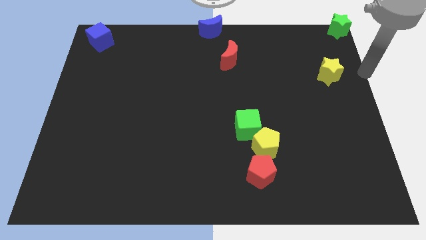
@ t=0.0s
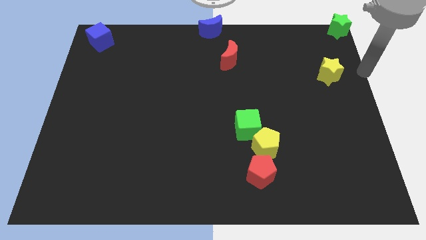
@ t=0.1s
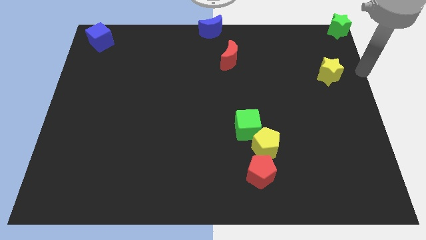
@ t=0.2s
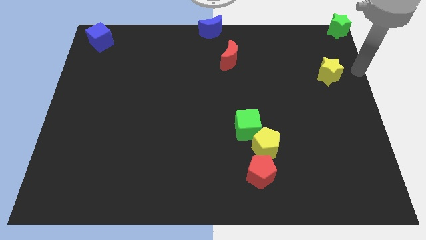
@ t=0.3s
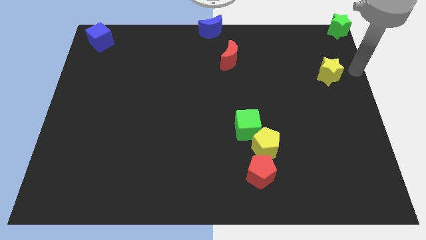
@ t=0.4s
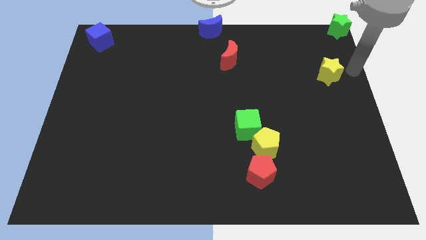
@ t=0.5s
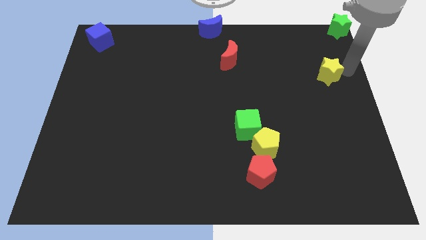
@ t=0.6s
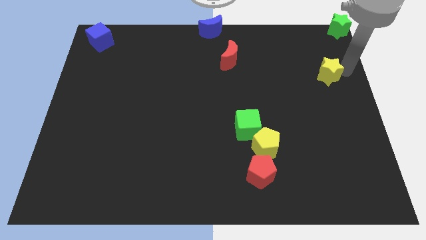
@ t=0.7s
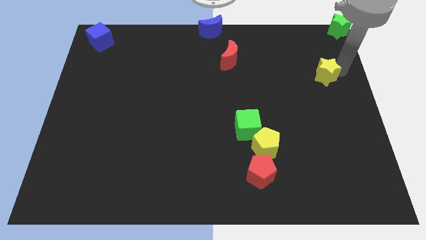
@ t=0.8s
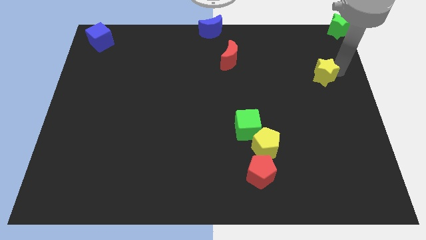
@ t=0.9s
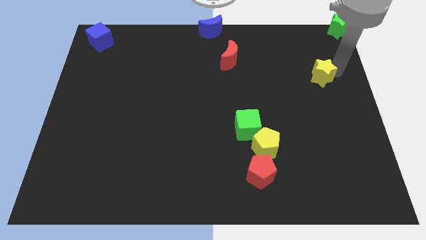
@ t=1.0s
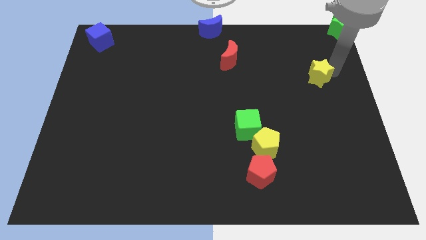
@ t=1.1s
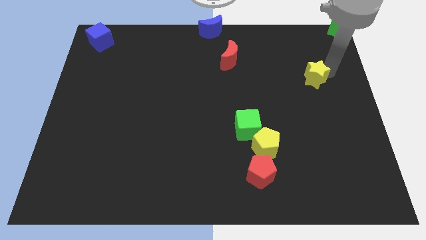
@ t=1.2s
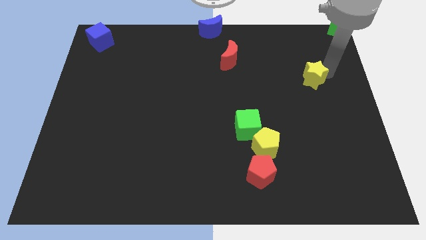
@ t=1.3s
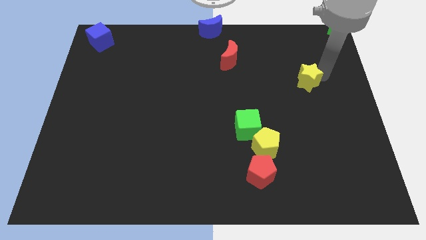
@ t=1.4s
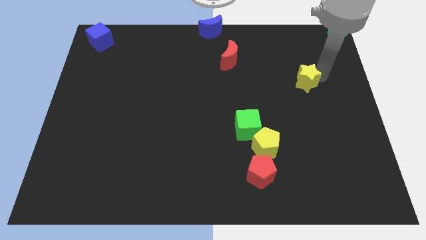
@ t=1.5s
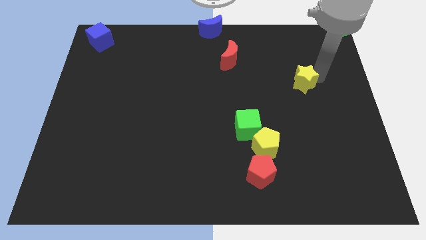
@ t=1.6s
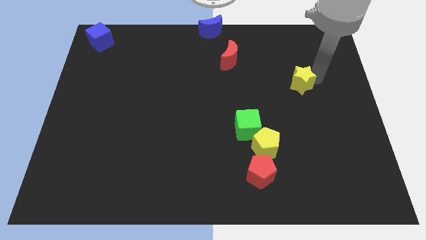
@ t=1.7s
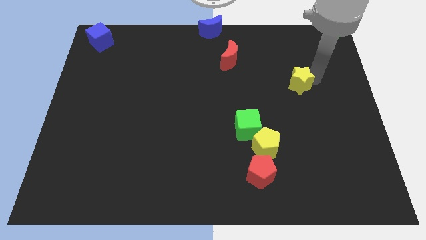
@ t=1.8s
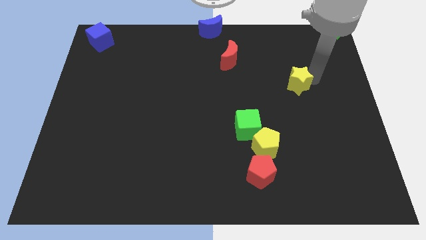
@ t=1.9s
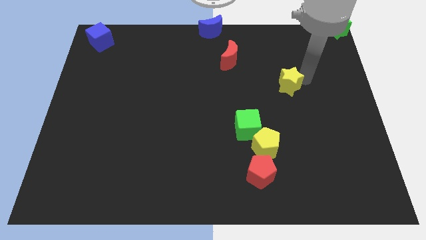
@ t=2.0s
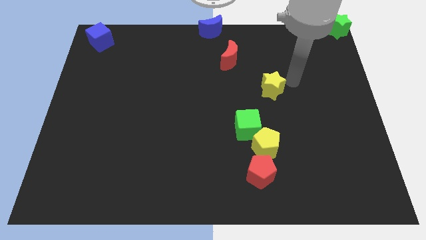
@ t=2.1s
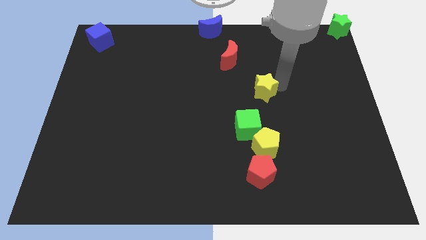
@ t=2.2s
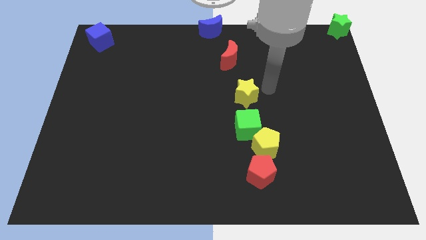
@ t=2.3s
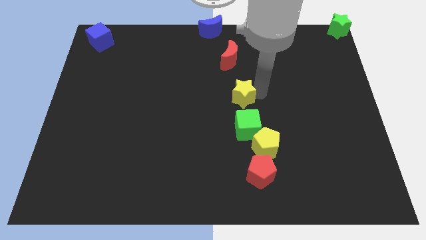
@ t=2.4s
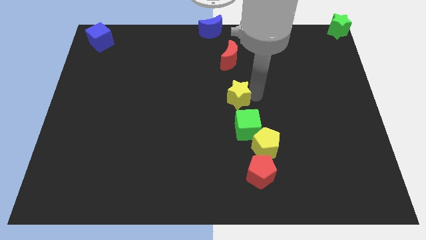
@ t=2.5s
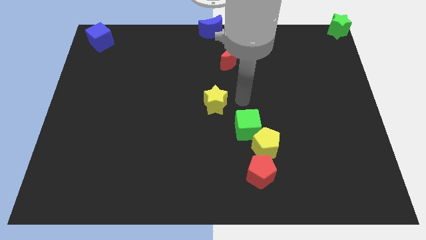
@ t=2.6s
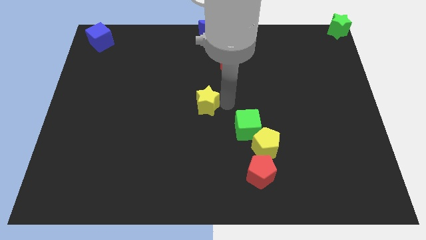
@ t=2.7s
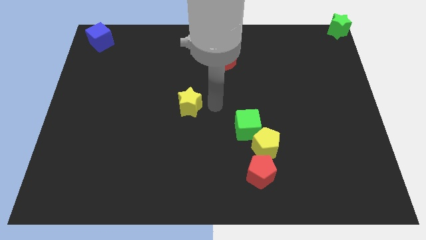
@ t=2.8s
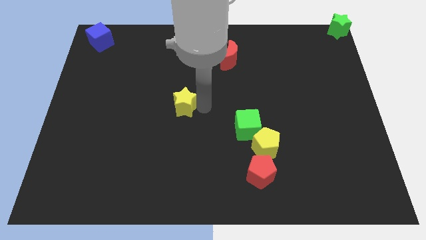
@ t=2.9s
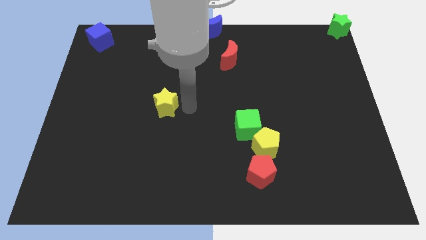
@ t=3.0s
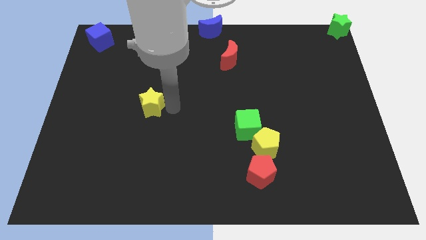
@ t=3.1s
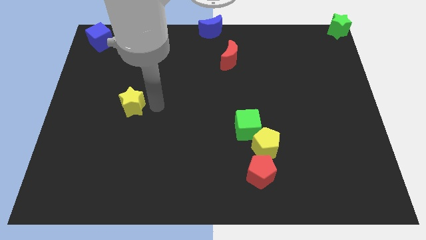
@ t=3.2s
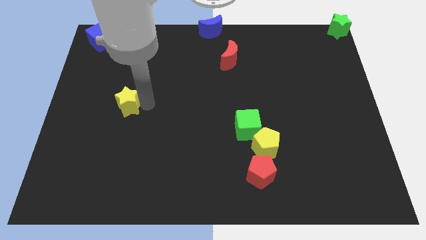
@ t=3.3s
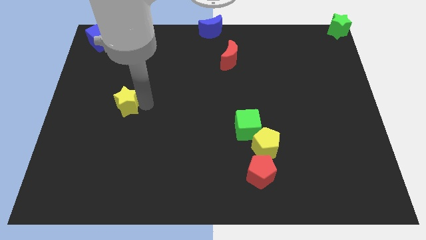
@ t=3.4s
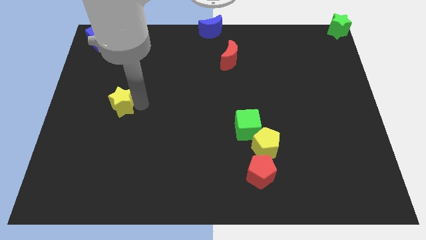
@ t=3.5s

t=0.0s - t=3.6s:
push the yellow star to its left

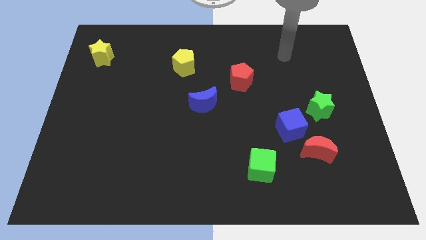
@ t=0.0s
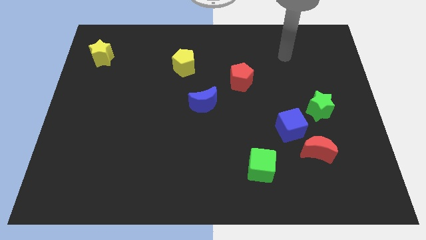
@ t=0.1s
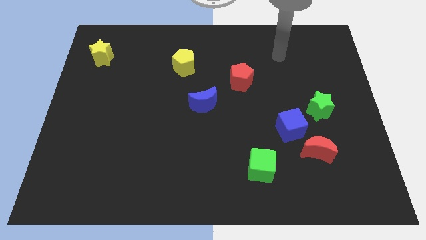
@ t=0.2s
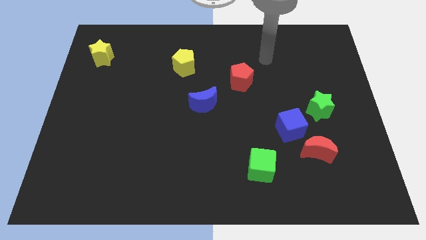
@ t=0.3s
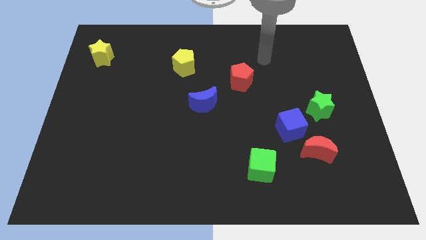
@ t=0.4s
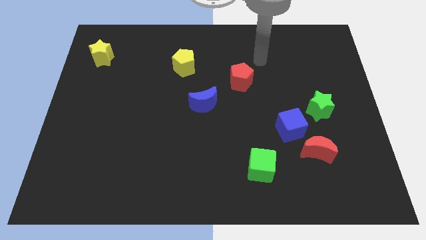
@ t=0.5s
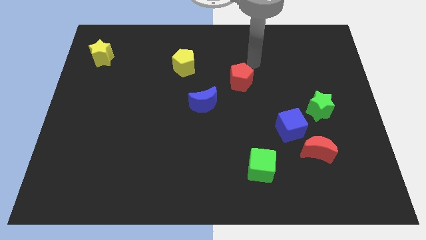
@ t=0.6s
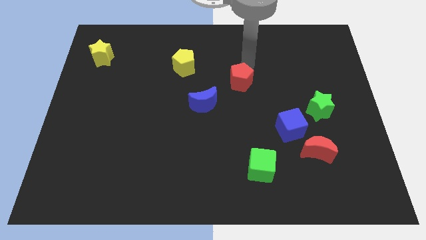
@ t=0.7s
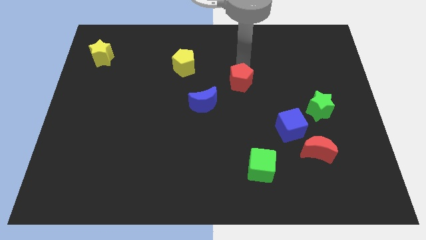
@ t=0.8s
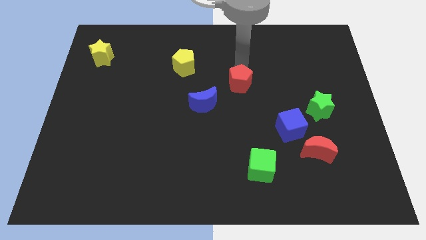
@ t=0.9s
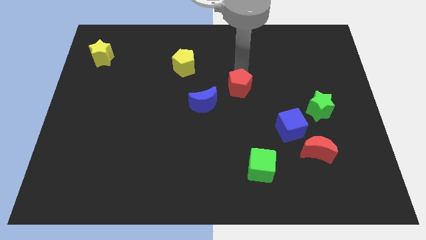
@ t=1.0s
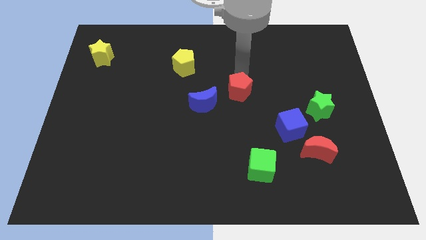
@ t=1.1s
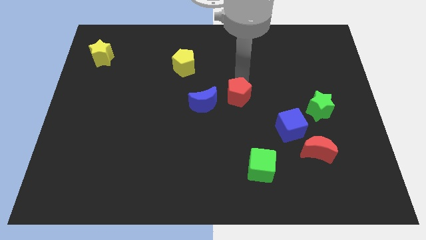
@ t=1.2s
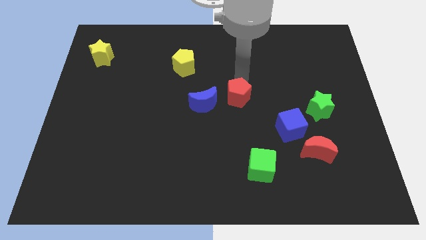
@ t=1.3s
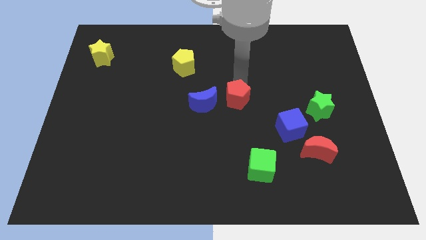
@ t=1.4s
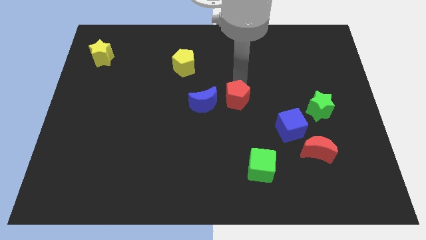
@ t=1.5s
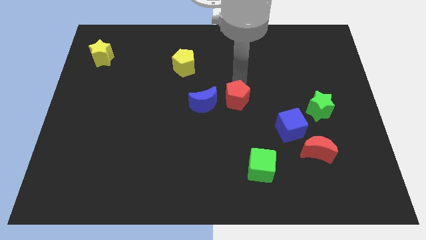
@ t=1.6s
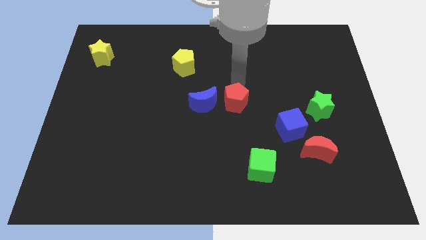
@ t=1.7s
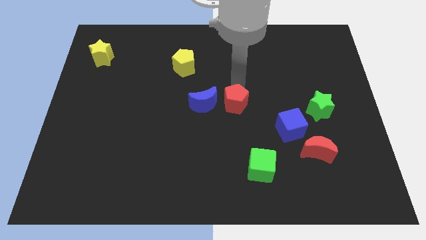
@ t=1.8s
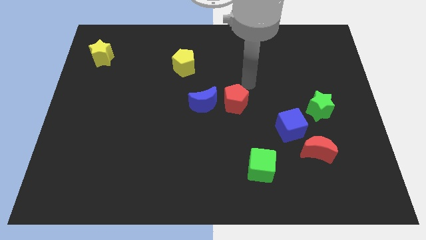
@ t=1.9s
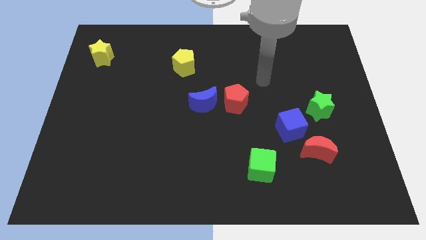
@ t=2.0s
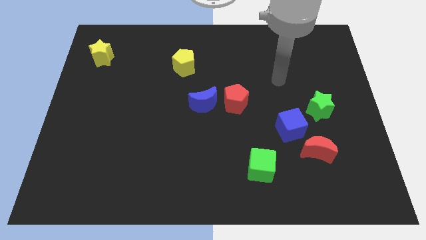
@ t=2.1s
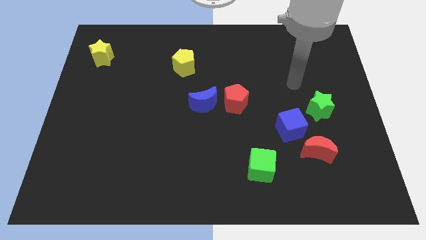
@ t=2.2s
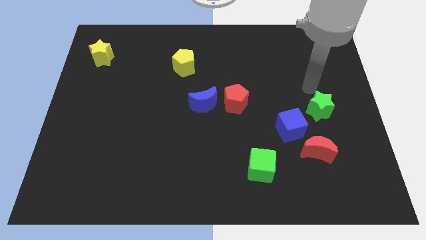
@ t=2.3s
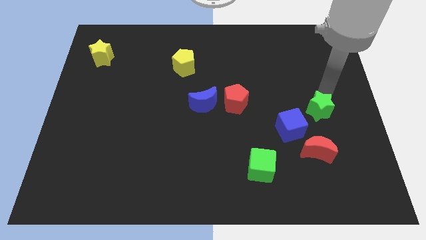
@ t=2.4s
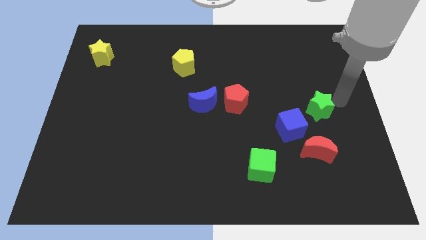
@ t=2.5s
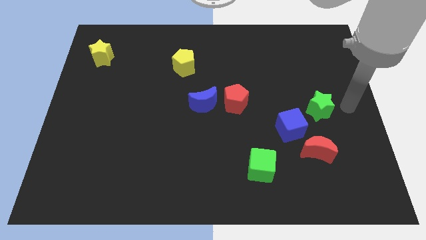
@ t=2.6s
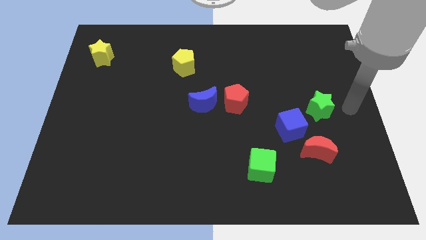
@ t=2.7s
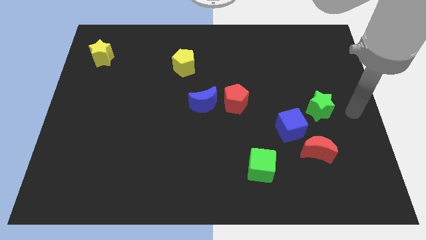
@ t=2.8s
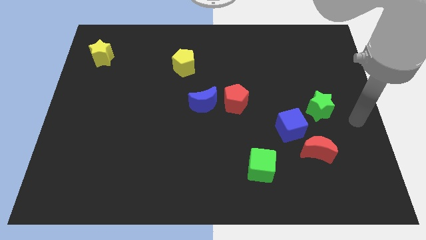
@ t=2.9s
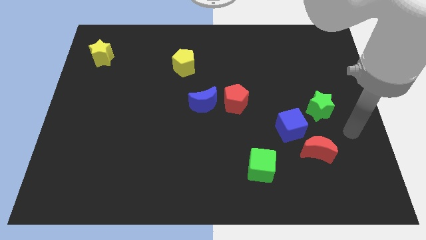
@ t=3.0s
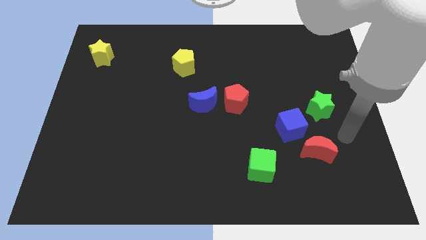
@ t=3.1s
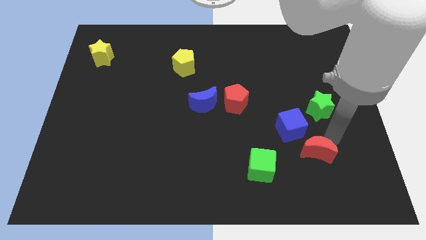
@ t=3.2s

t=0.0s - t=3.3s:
move the red pentagon to the right of the blue crescent

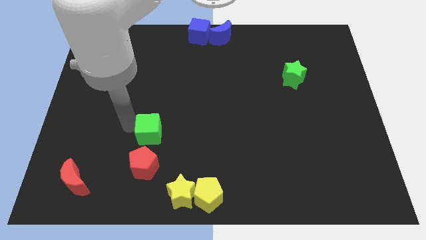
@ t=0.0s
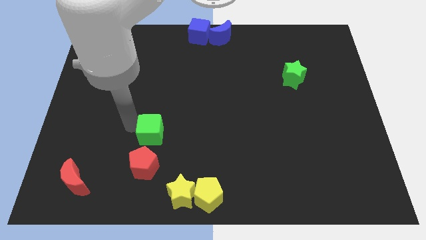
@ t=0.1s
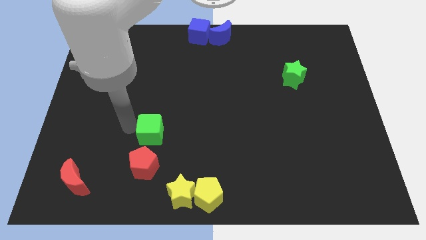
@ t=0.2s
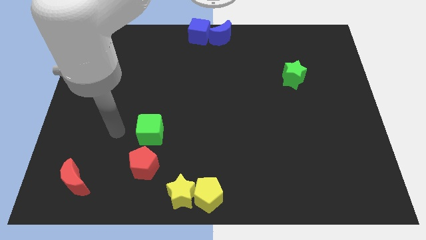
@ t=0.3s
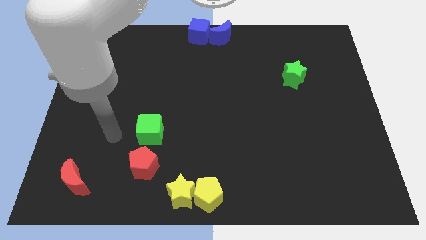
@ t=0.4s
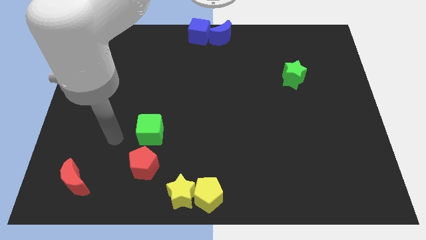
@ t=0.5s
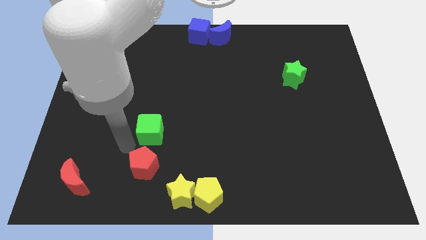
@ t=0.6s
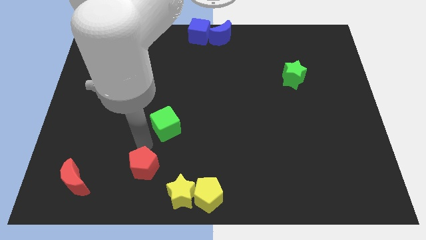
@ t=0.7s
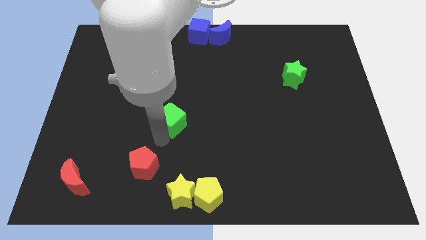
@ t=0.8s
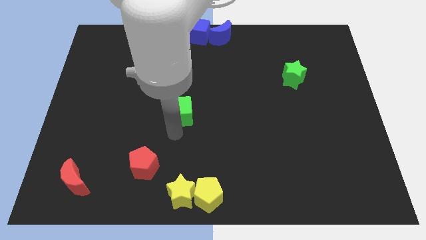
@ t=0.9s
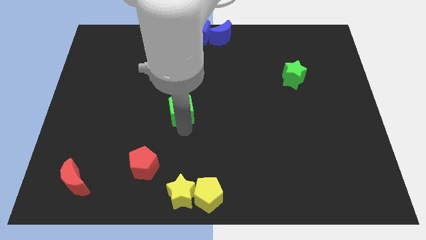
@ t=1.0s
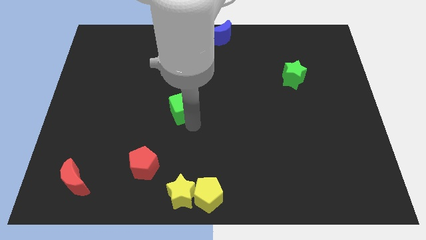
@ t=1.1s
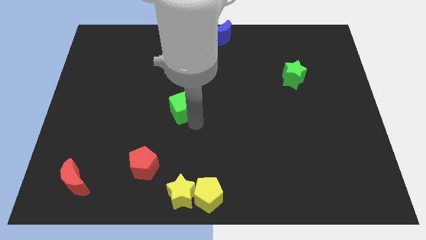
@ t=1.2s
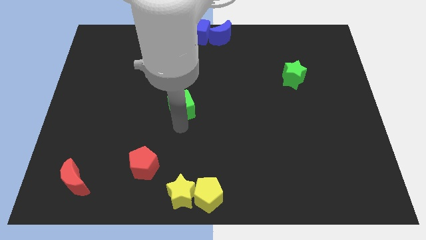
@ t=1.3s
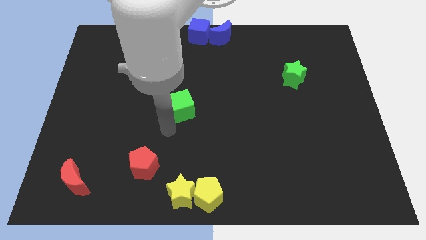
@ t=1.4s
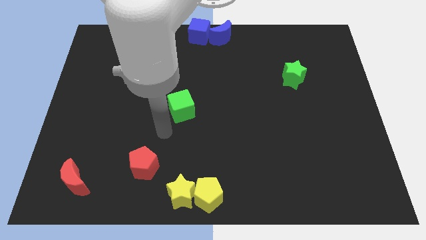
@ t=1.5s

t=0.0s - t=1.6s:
move the green cube to the center

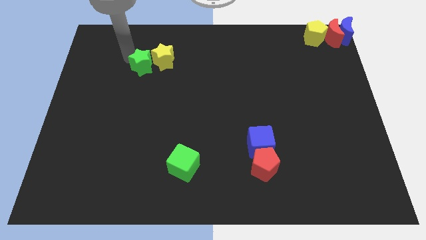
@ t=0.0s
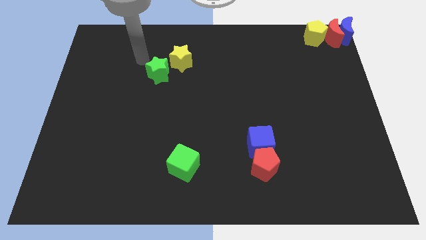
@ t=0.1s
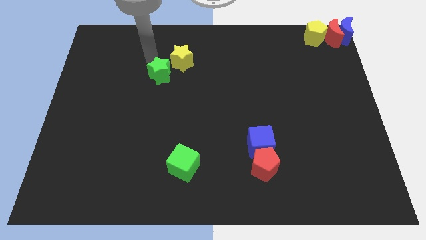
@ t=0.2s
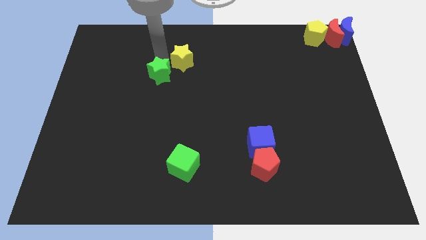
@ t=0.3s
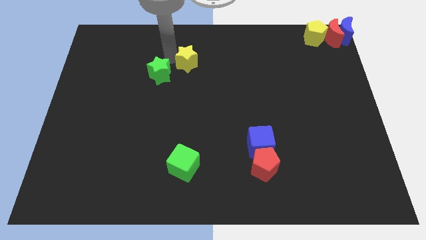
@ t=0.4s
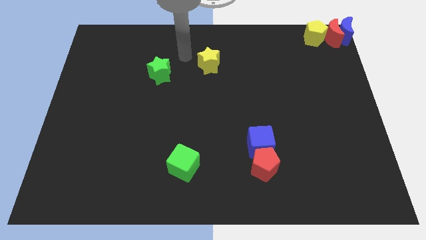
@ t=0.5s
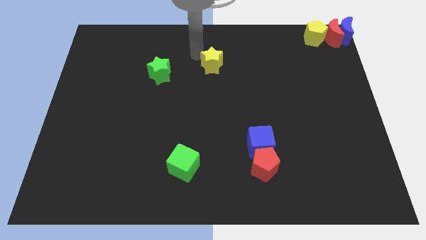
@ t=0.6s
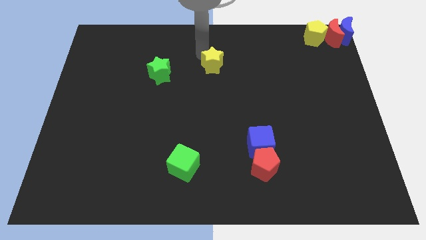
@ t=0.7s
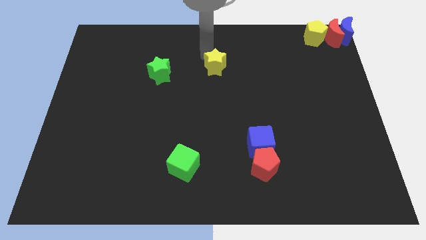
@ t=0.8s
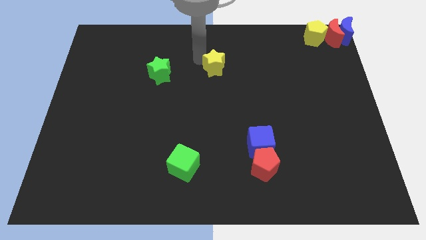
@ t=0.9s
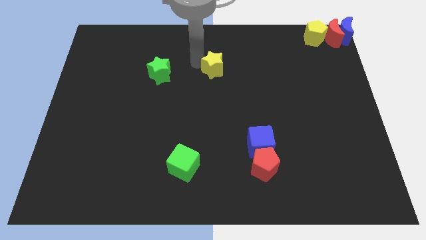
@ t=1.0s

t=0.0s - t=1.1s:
separate yellow star from green star
